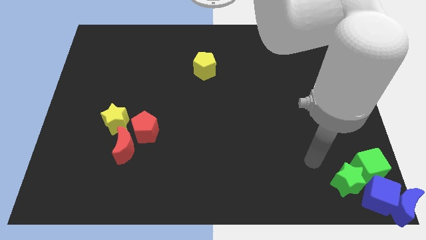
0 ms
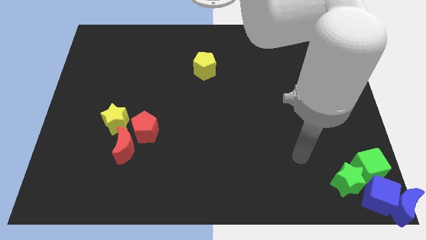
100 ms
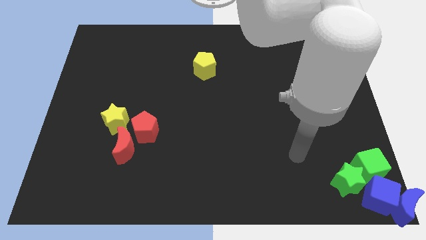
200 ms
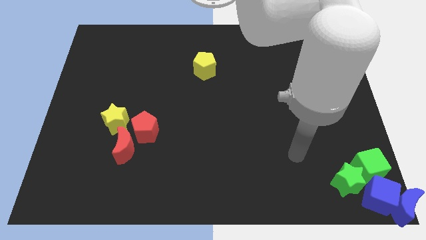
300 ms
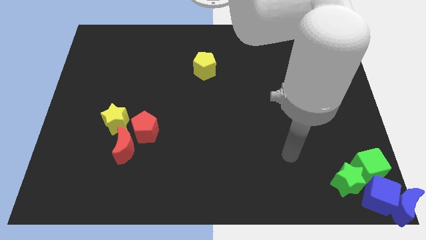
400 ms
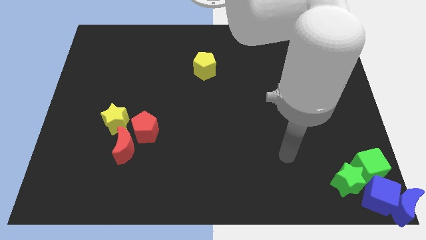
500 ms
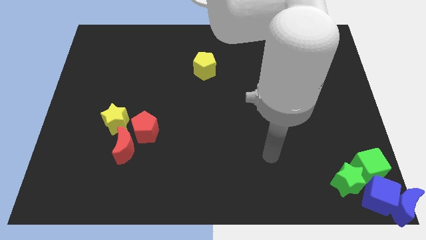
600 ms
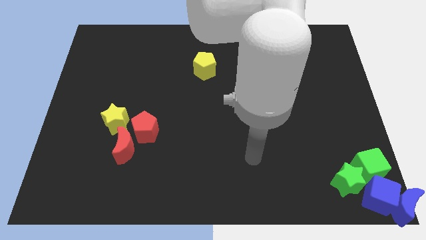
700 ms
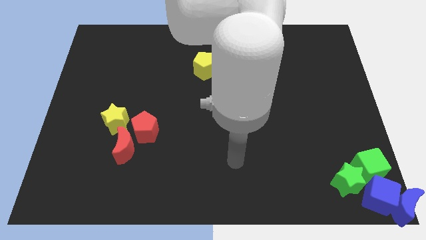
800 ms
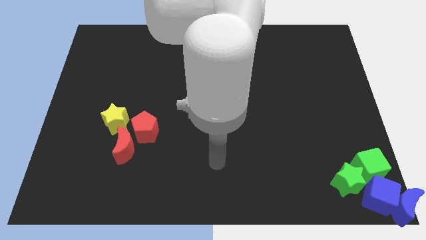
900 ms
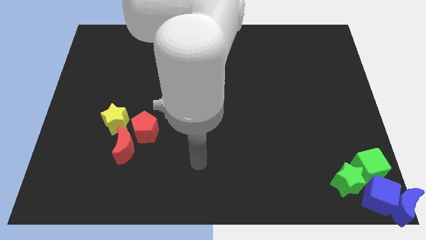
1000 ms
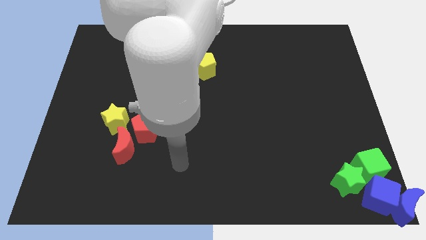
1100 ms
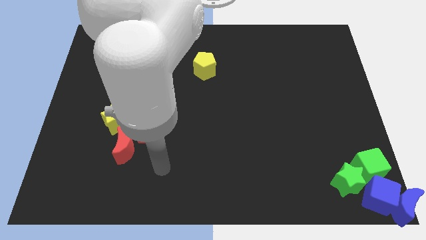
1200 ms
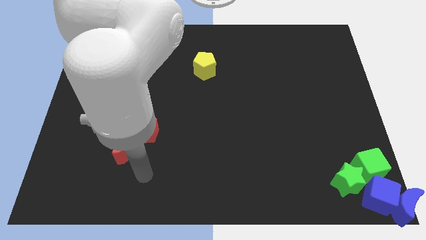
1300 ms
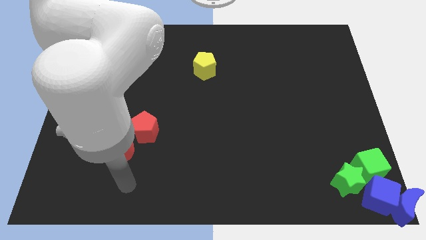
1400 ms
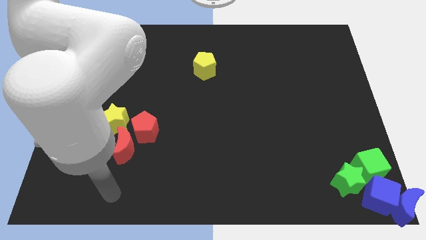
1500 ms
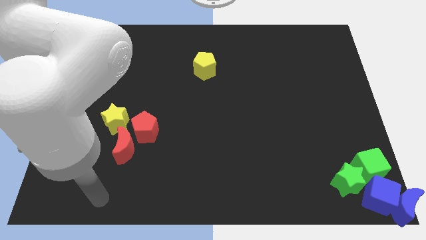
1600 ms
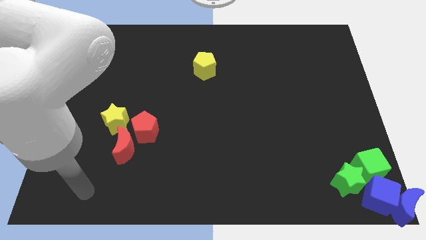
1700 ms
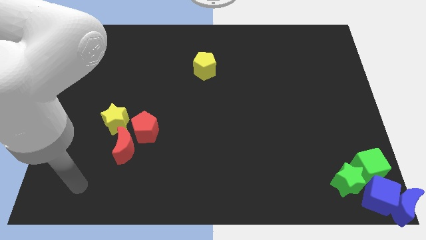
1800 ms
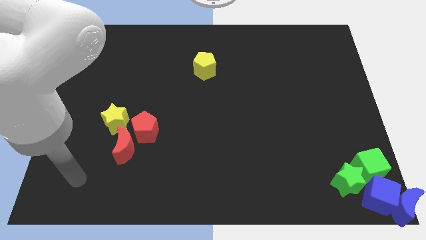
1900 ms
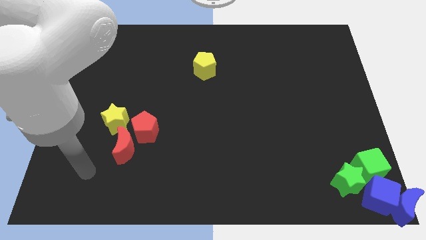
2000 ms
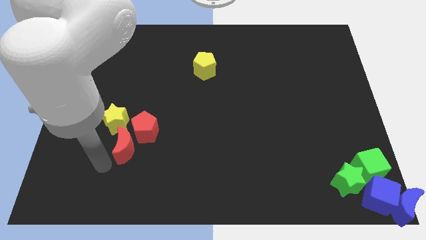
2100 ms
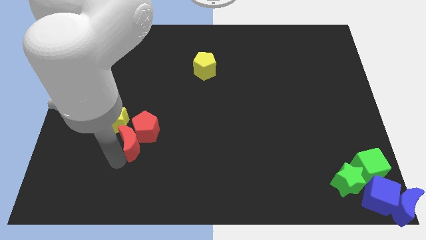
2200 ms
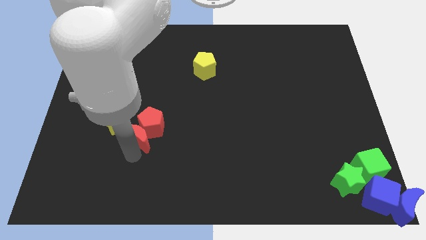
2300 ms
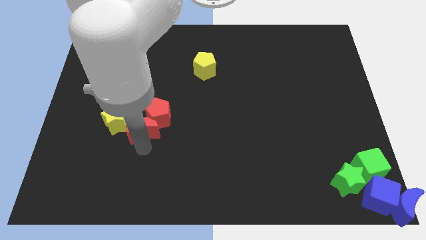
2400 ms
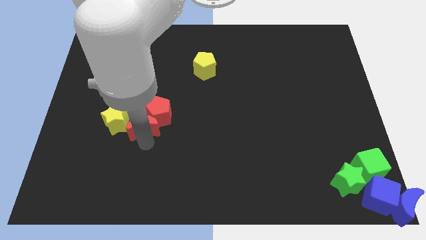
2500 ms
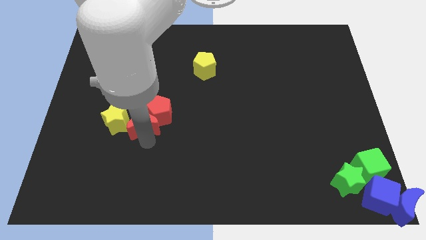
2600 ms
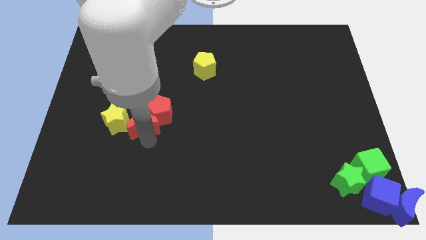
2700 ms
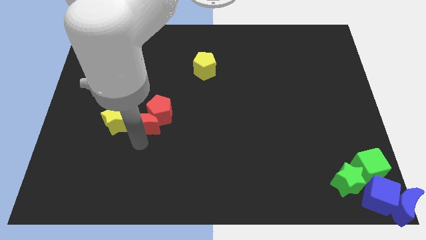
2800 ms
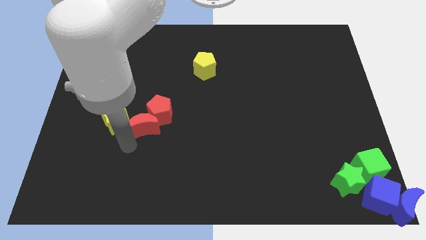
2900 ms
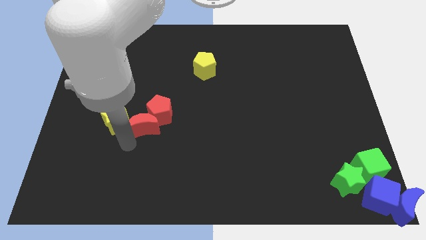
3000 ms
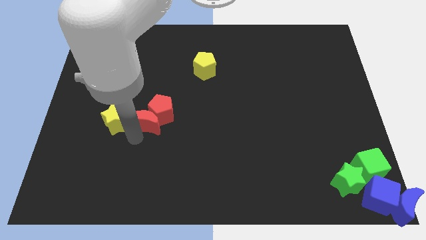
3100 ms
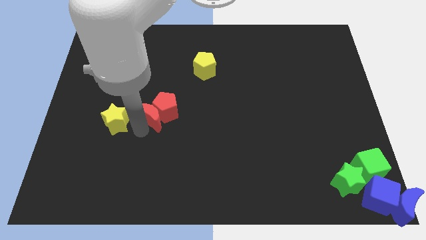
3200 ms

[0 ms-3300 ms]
move red moon to the center

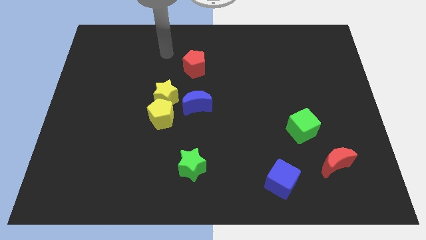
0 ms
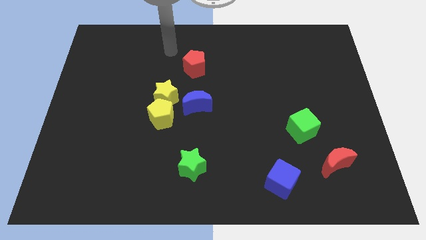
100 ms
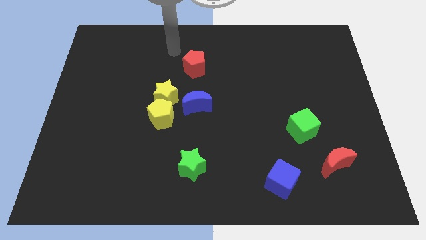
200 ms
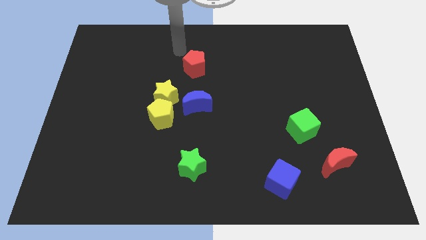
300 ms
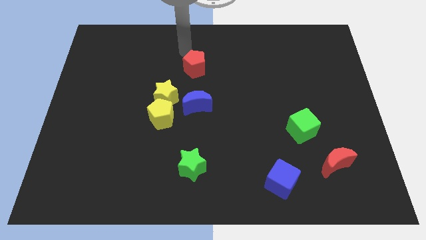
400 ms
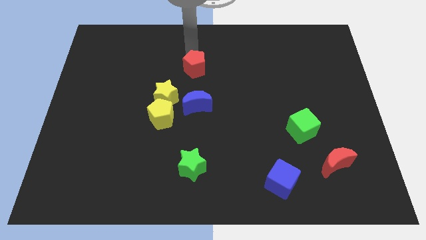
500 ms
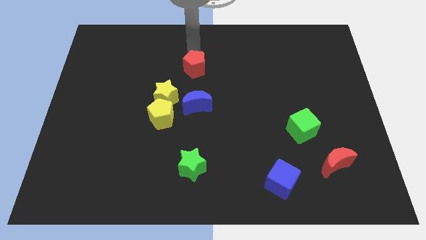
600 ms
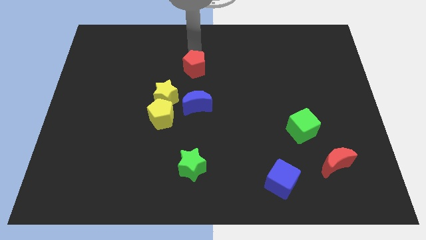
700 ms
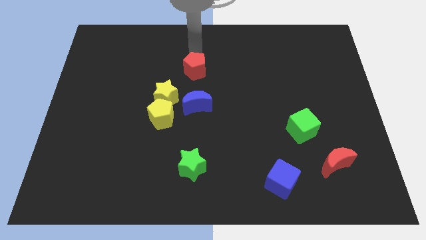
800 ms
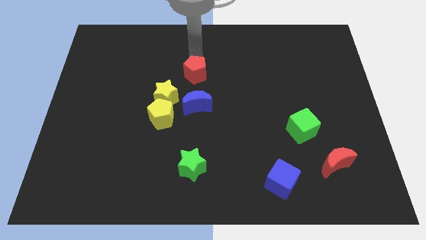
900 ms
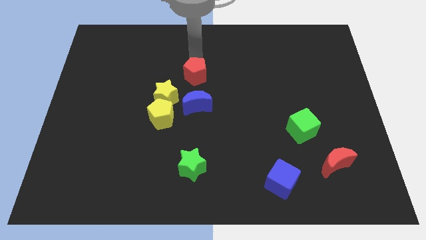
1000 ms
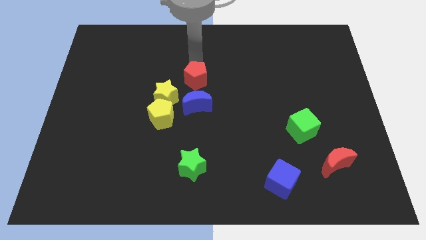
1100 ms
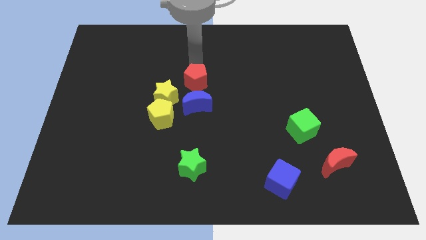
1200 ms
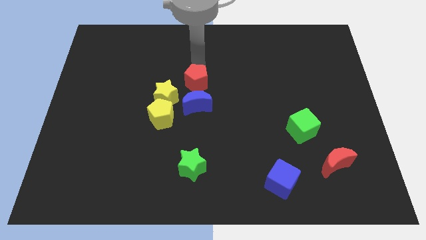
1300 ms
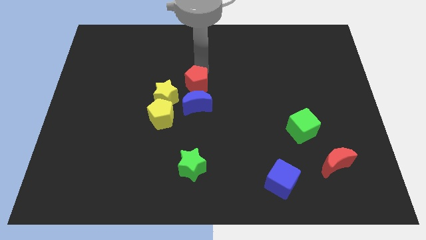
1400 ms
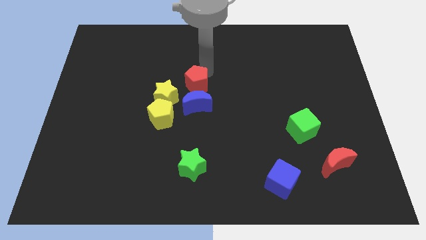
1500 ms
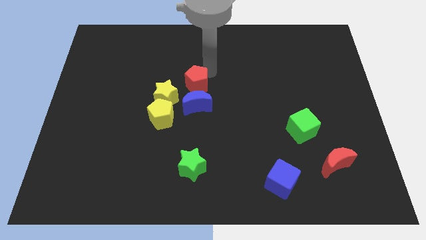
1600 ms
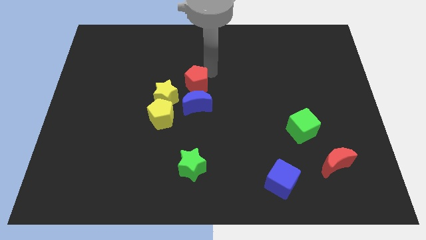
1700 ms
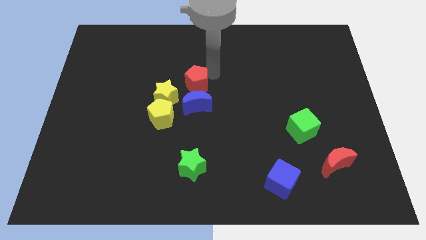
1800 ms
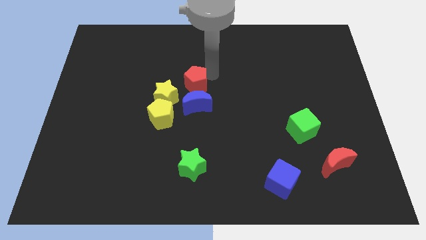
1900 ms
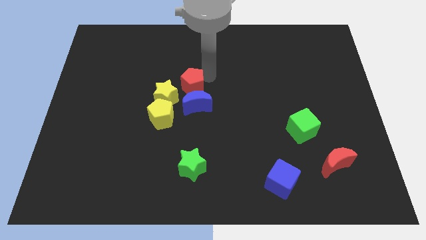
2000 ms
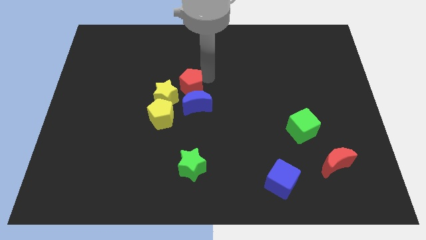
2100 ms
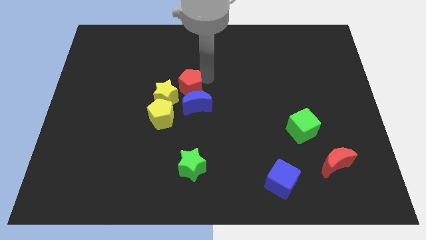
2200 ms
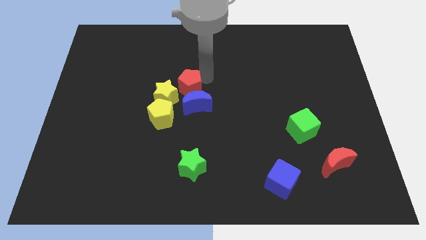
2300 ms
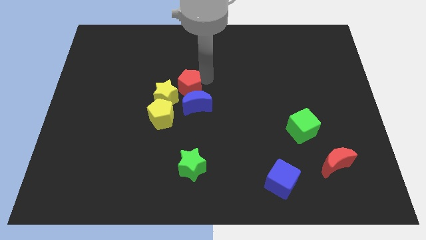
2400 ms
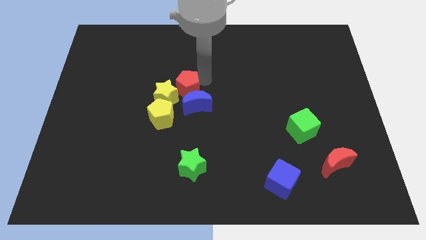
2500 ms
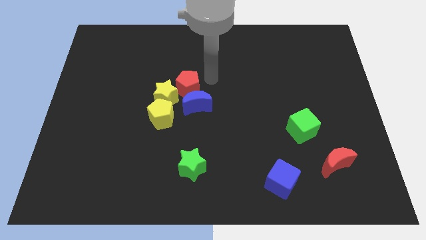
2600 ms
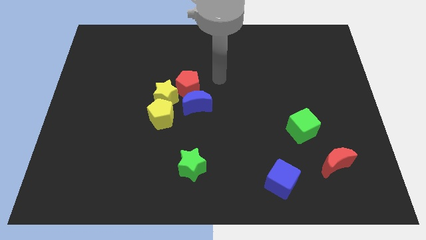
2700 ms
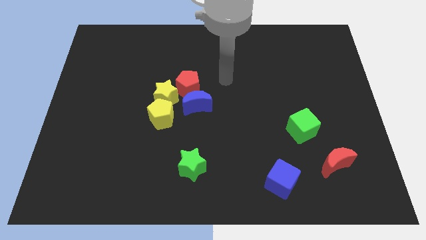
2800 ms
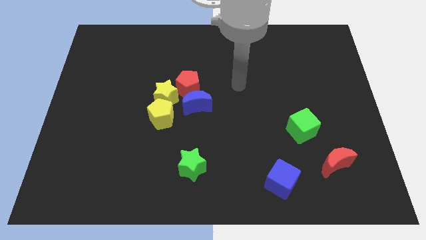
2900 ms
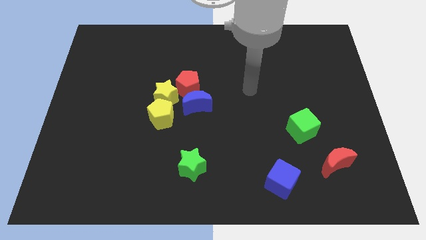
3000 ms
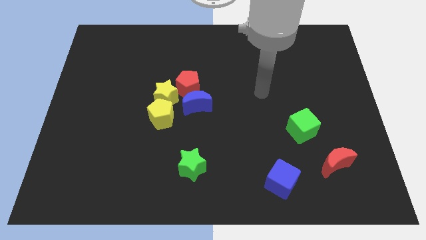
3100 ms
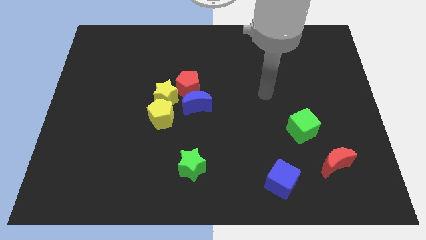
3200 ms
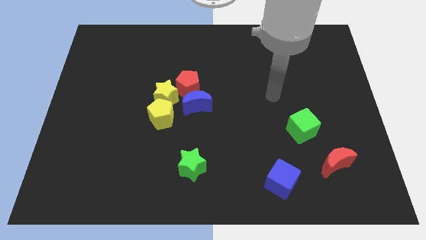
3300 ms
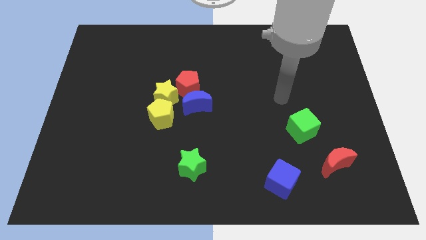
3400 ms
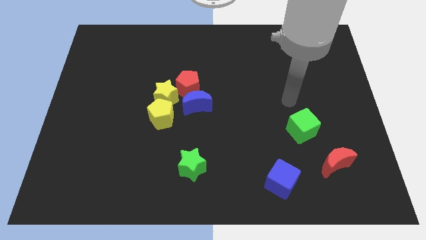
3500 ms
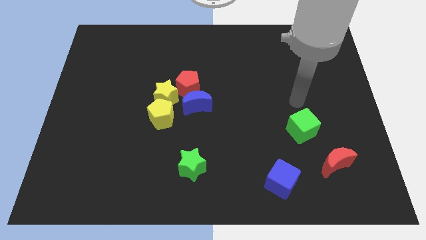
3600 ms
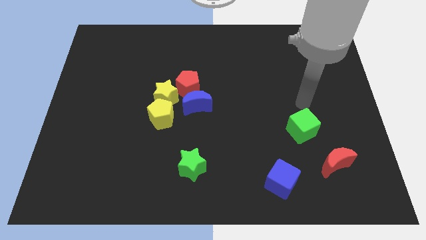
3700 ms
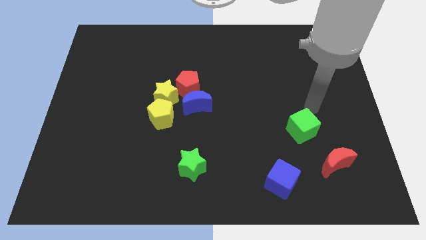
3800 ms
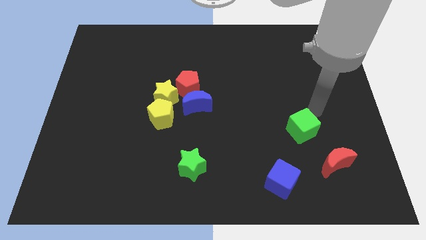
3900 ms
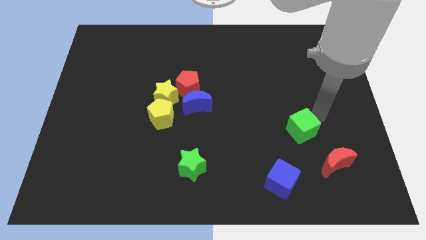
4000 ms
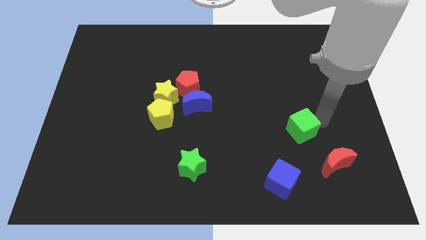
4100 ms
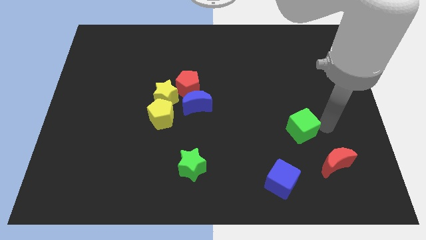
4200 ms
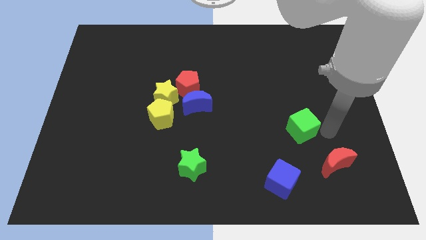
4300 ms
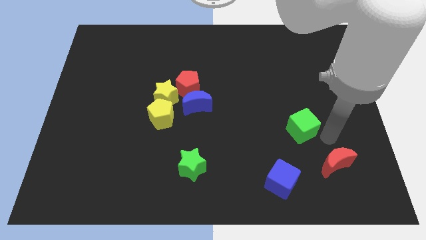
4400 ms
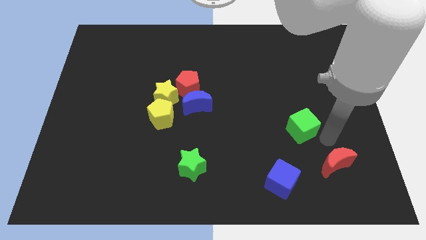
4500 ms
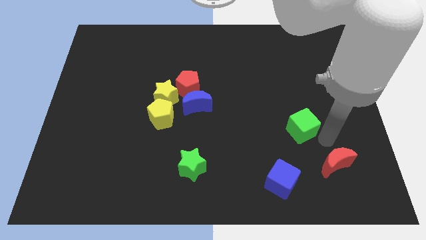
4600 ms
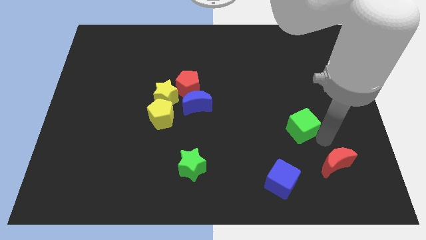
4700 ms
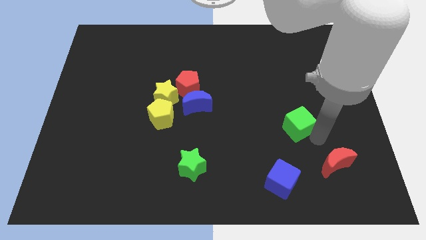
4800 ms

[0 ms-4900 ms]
place the red pentagon on top of the blue crescent

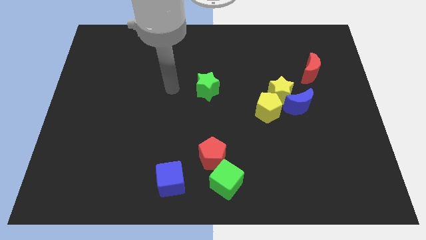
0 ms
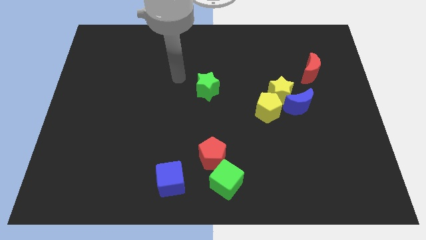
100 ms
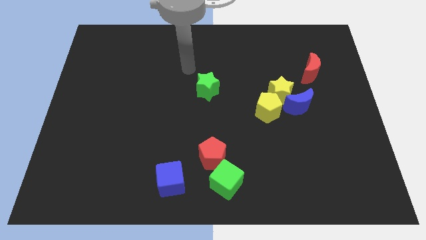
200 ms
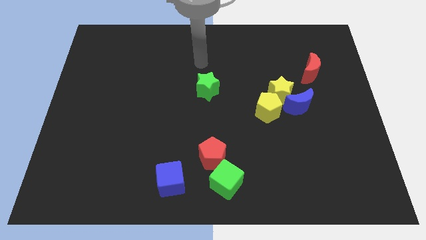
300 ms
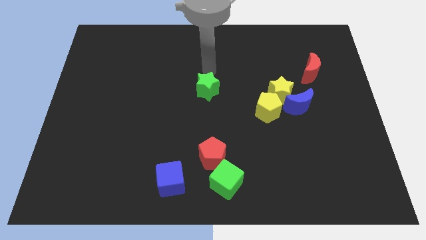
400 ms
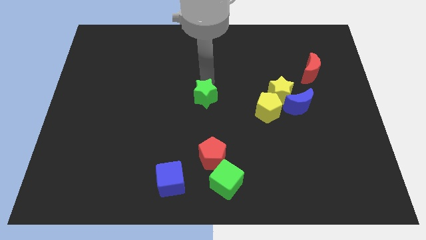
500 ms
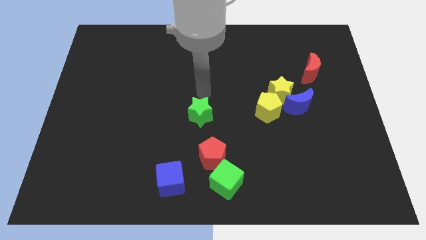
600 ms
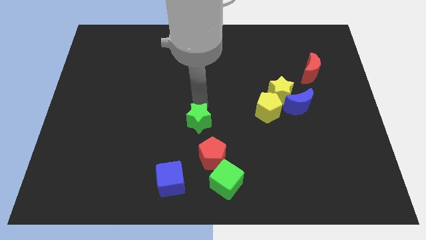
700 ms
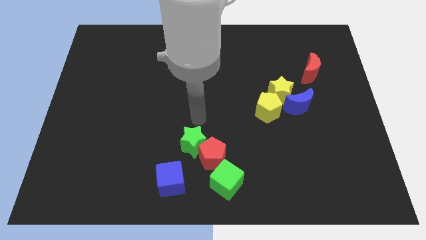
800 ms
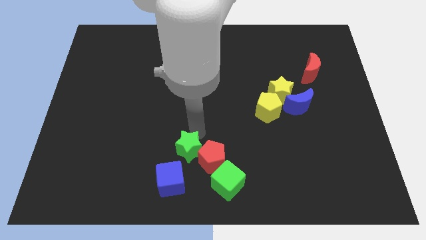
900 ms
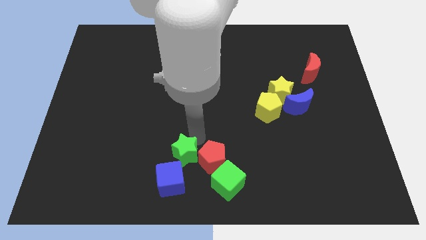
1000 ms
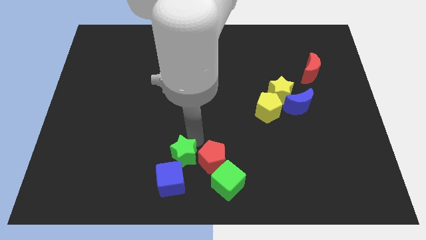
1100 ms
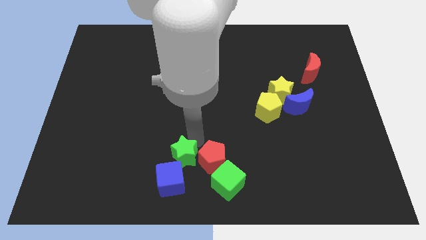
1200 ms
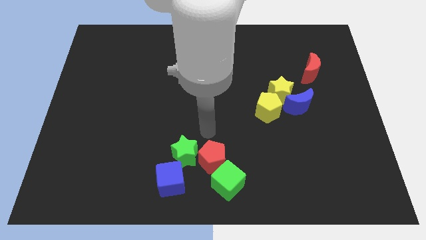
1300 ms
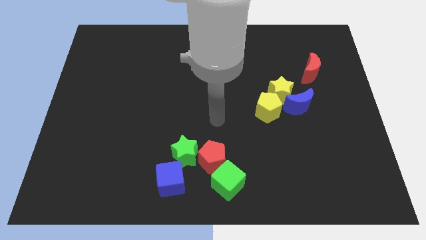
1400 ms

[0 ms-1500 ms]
push the green star close to the blue cube
